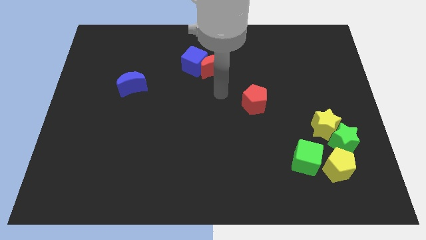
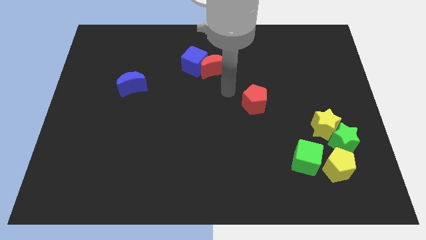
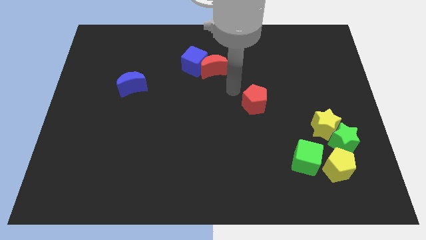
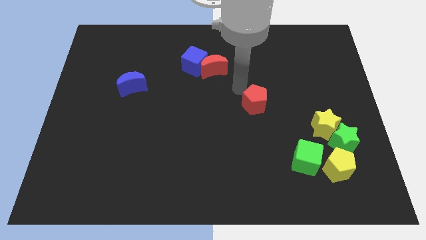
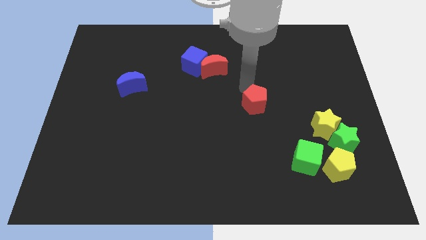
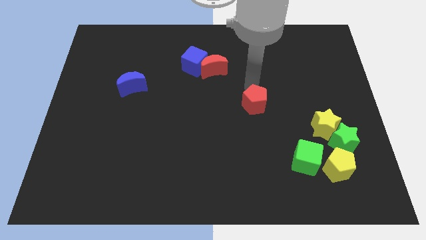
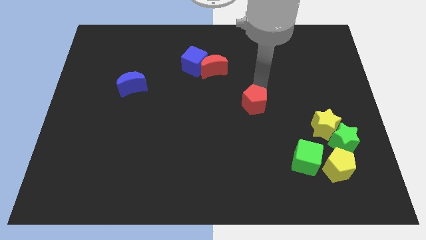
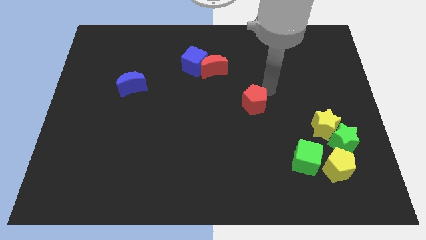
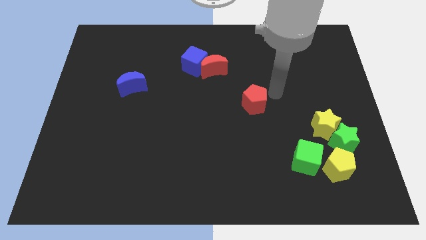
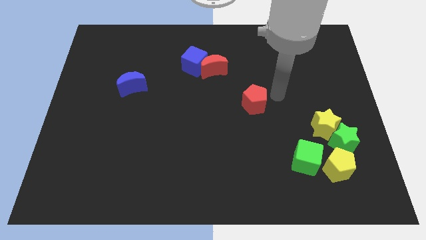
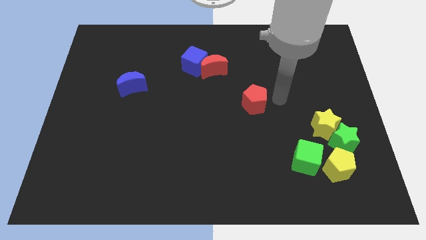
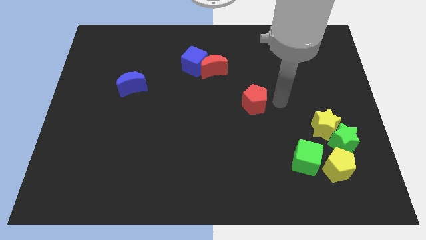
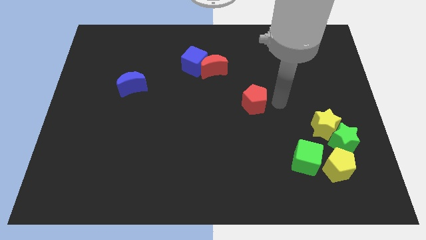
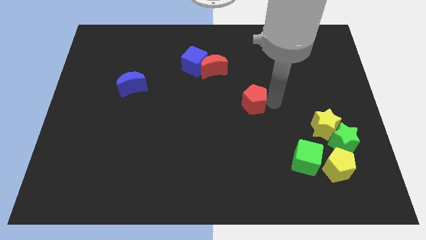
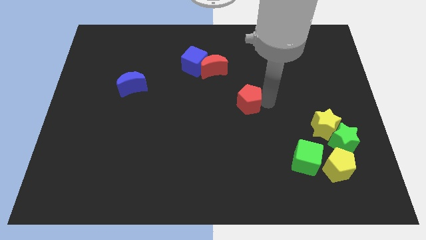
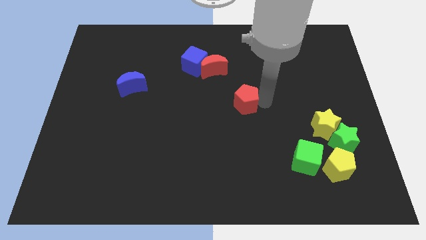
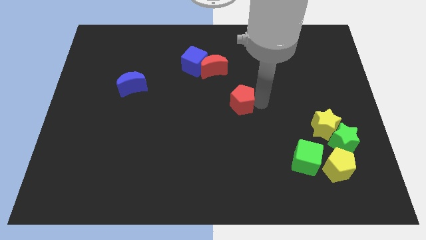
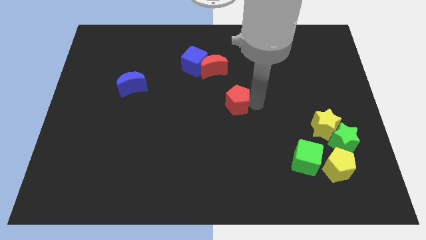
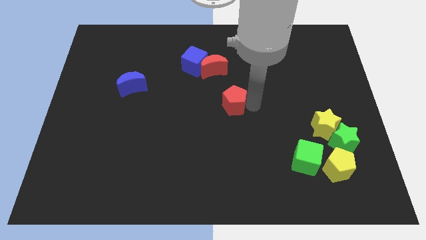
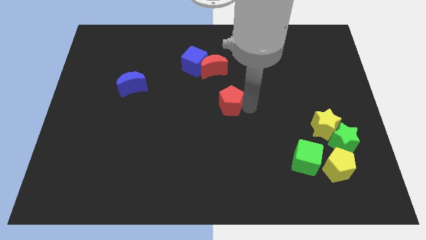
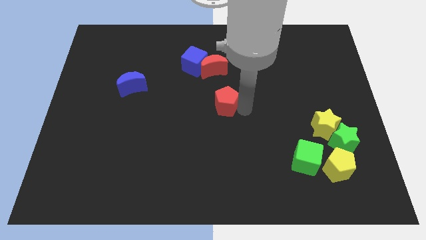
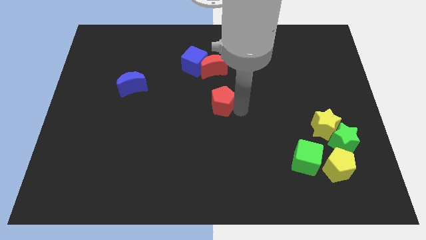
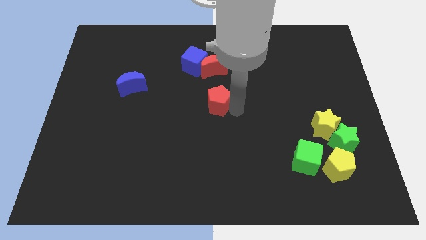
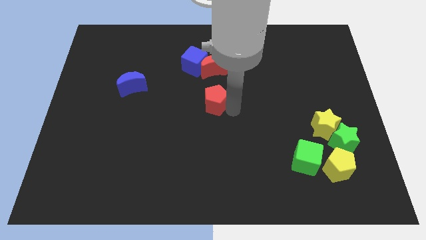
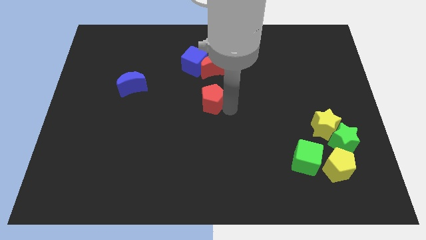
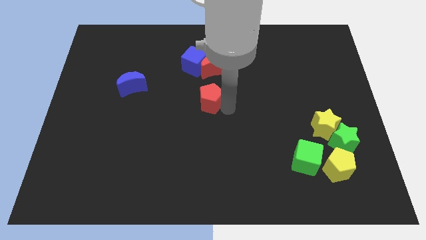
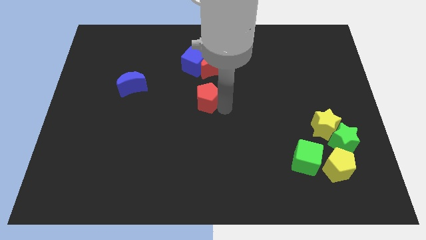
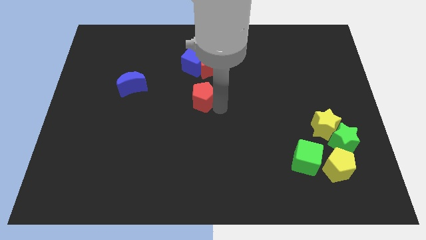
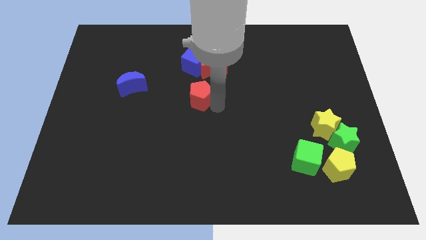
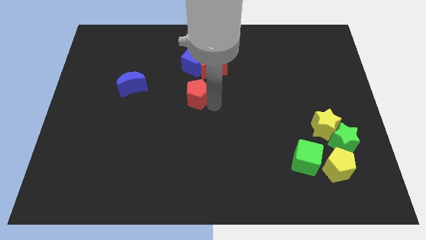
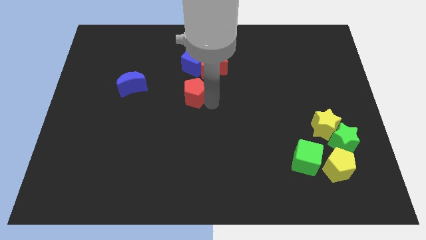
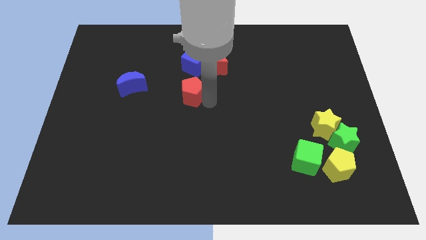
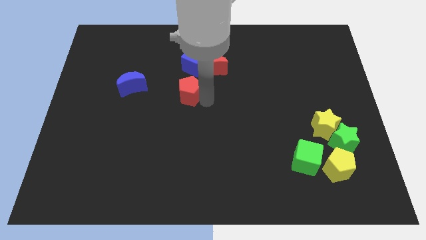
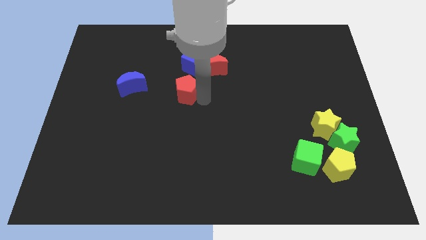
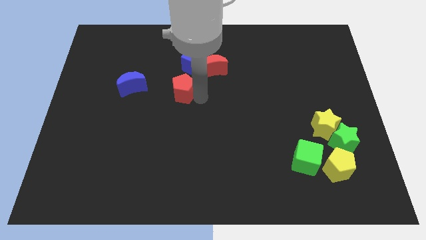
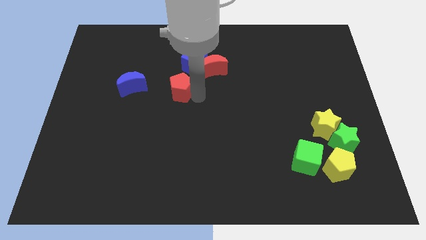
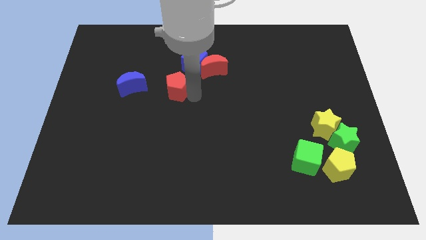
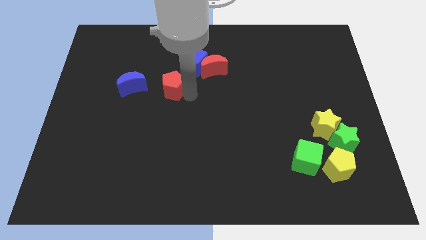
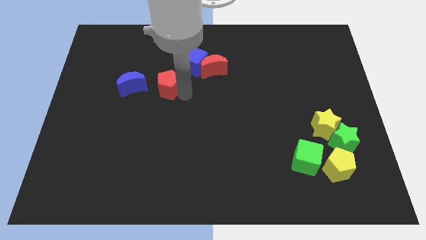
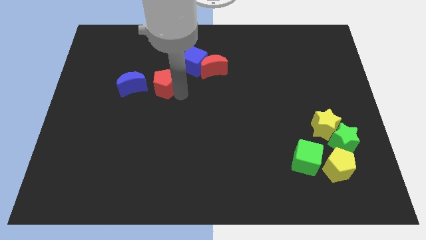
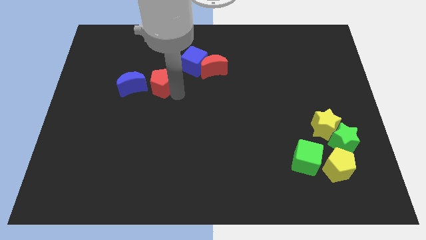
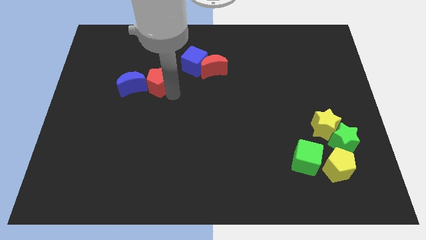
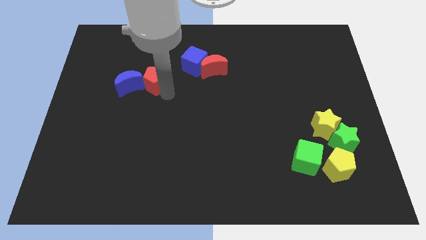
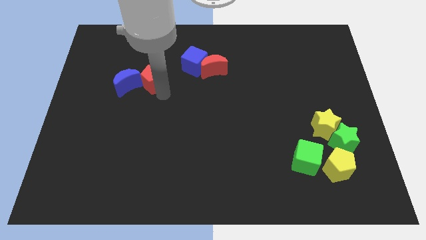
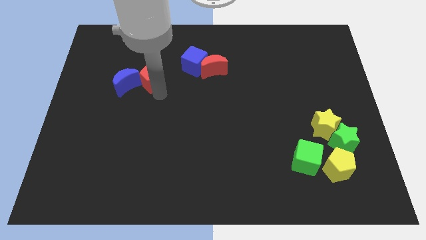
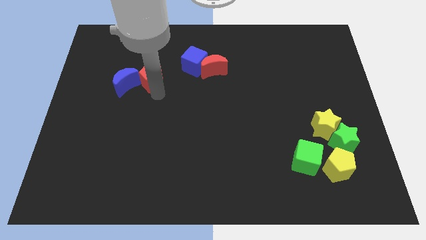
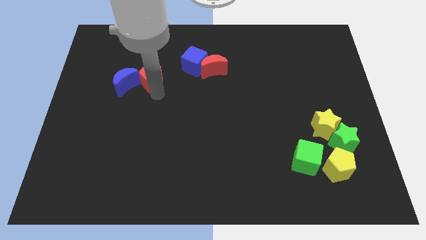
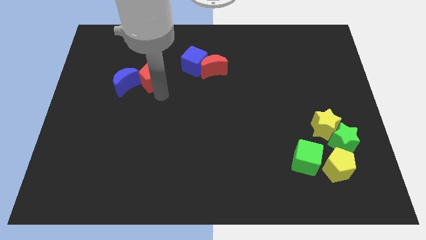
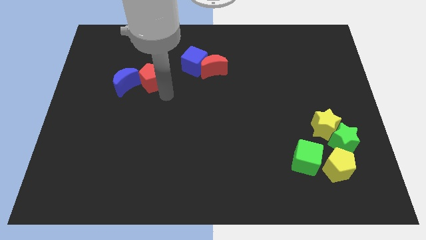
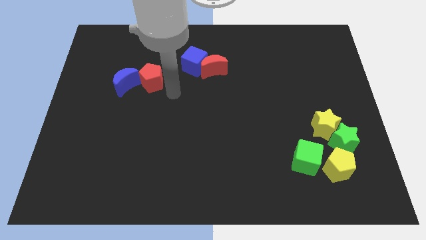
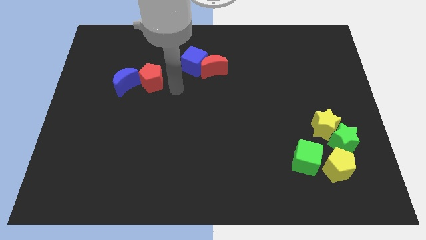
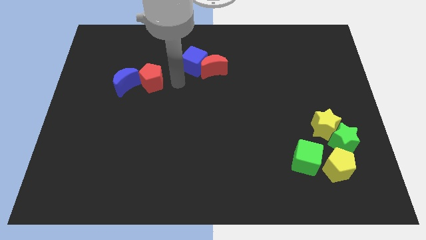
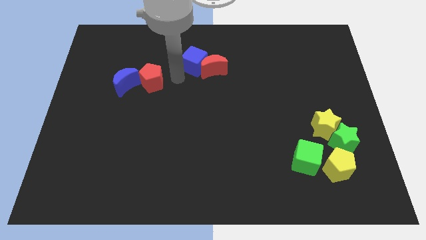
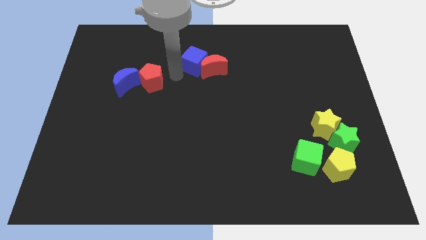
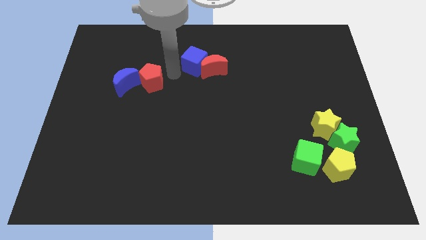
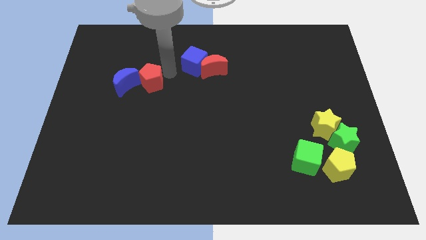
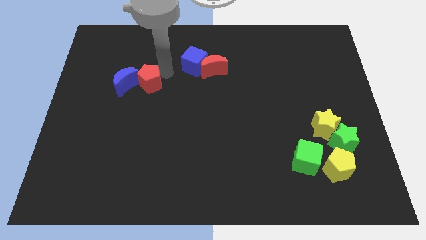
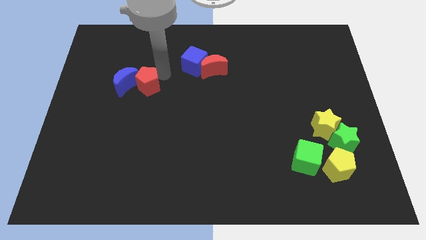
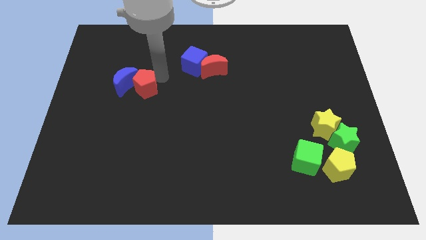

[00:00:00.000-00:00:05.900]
push the red pentagon next to the blue moon

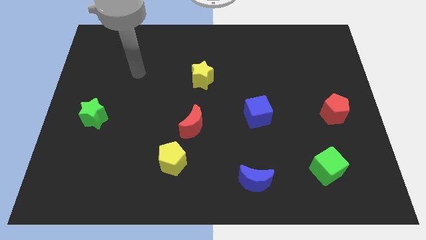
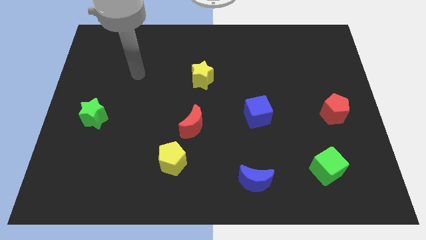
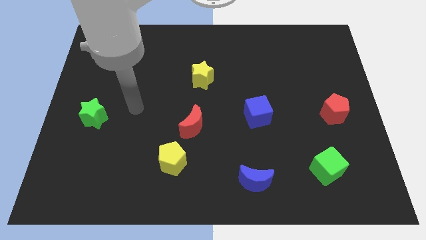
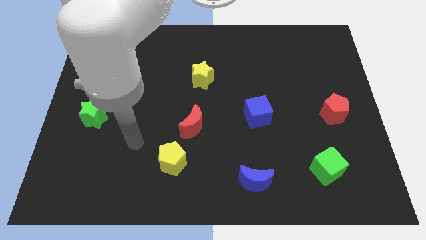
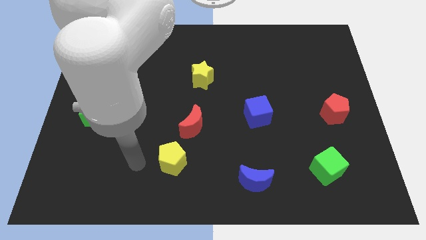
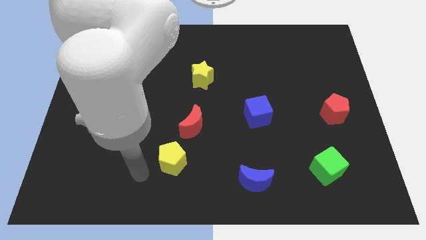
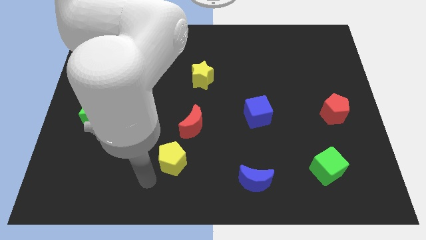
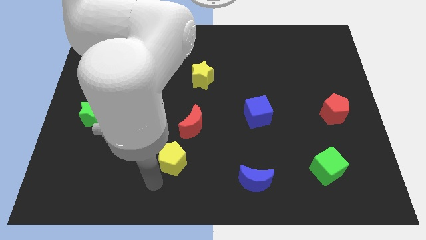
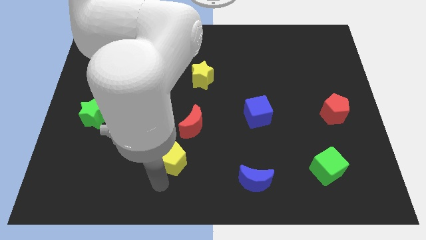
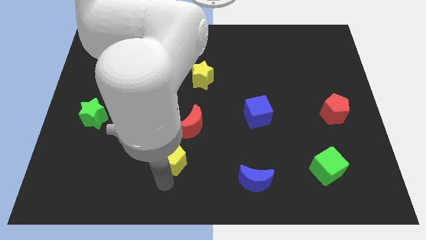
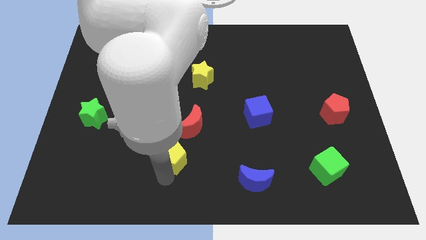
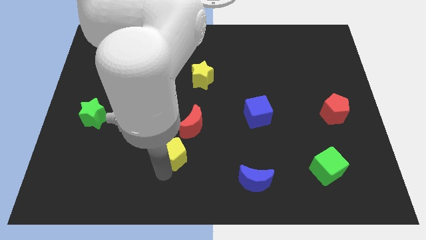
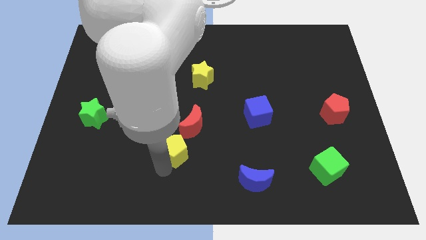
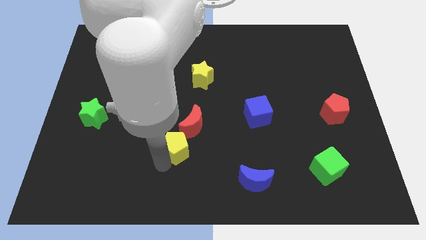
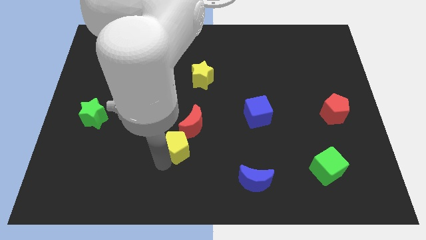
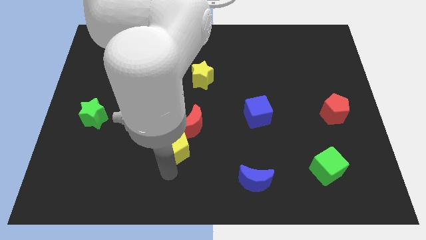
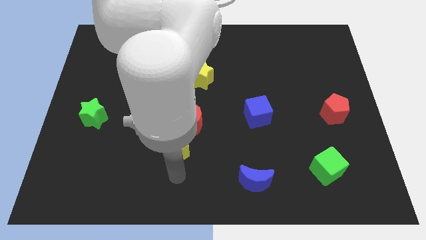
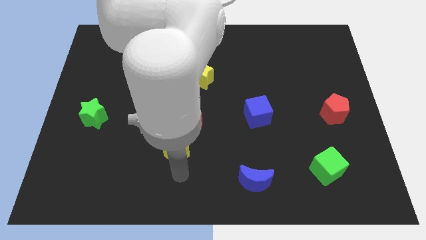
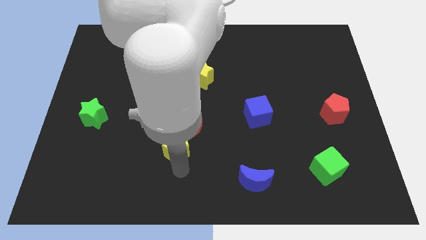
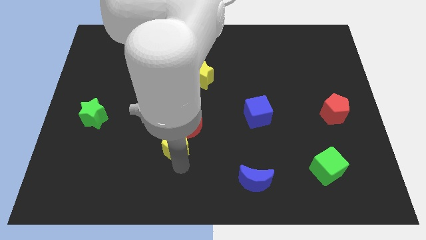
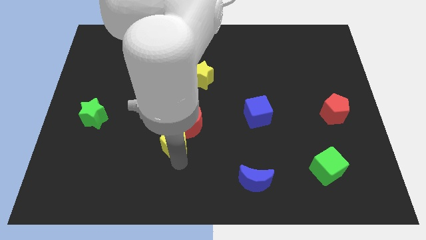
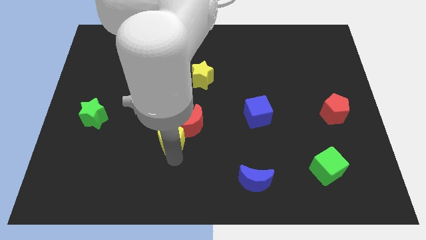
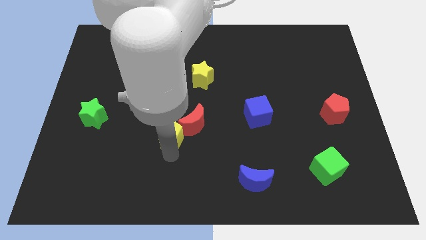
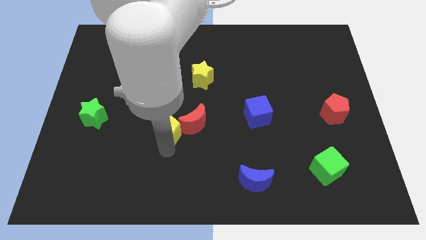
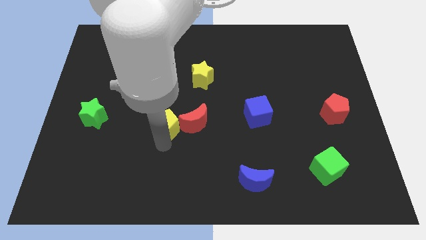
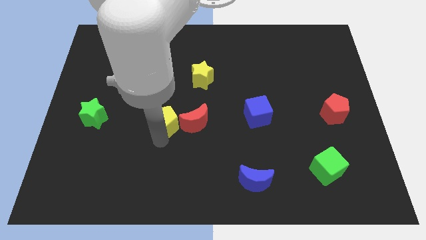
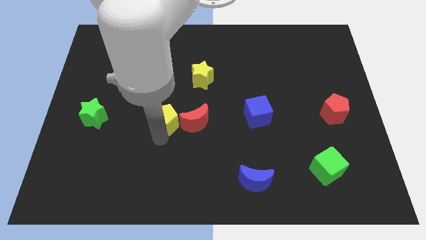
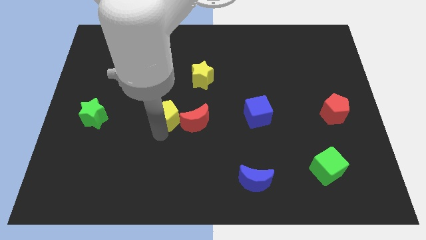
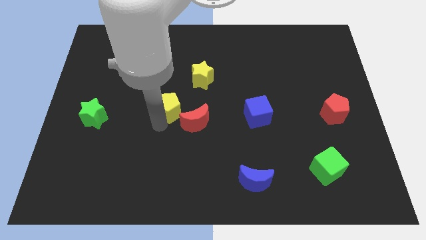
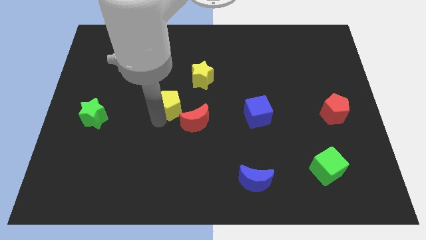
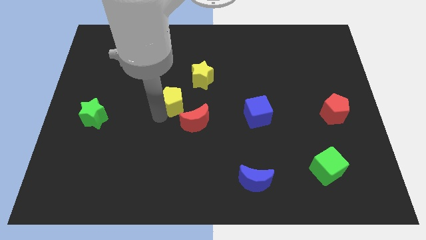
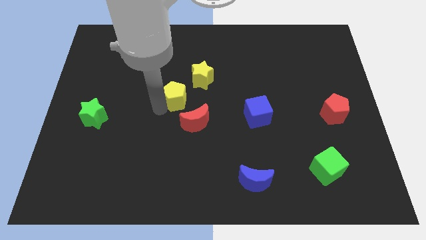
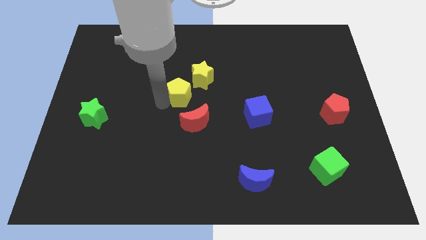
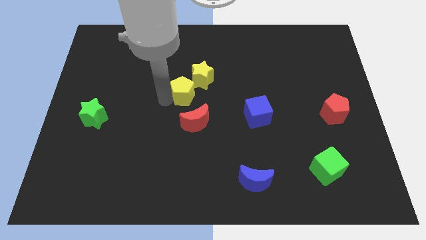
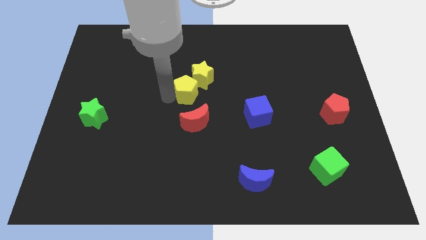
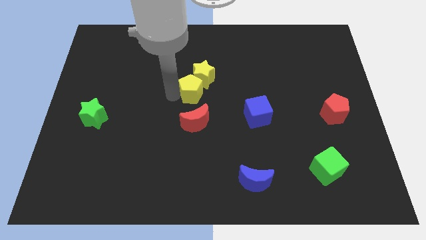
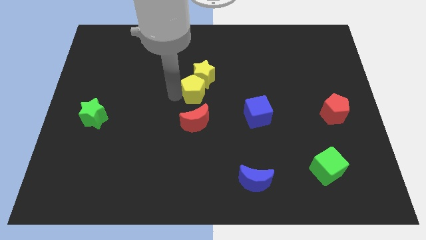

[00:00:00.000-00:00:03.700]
move the yellow pentagon next to the yellow star
